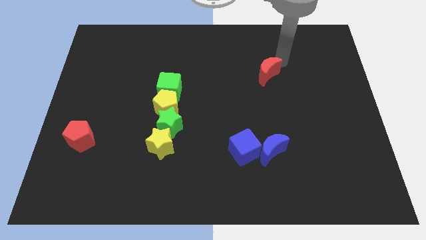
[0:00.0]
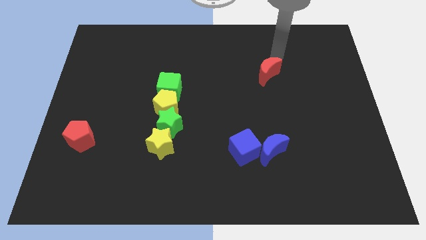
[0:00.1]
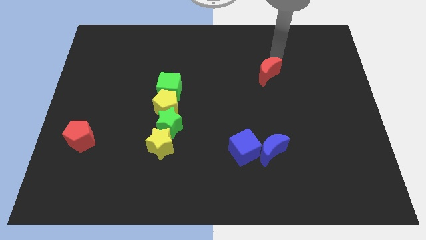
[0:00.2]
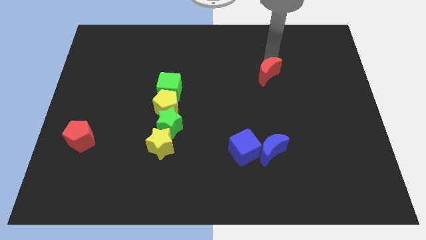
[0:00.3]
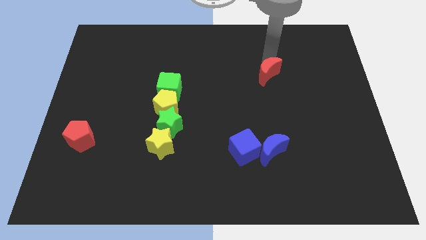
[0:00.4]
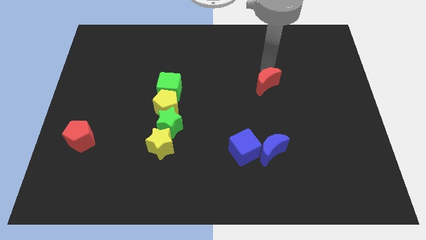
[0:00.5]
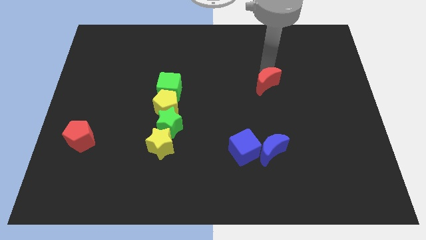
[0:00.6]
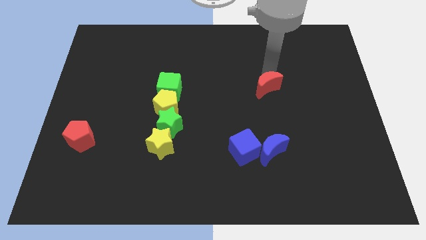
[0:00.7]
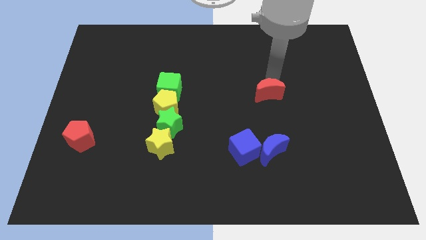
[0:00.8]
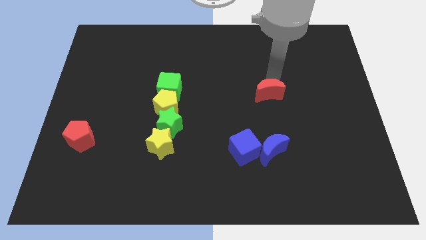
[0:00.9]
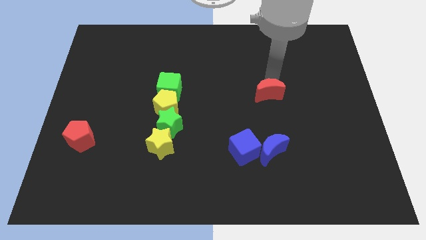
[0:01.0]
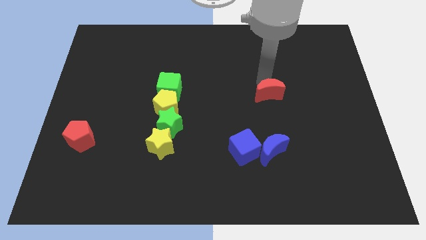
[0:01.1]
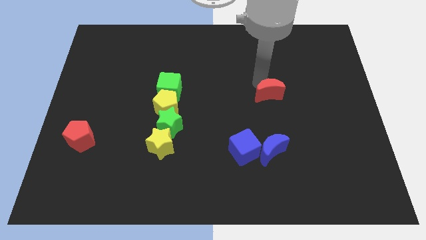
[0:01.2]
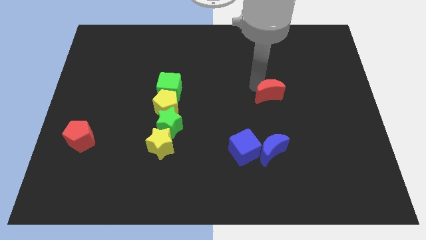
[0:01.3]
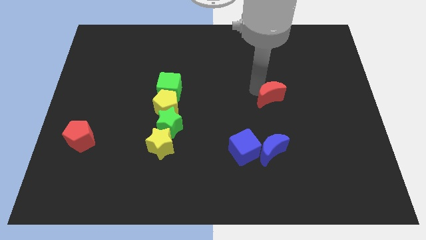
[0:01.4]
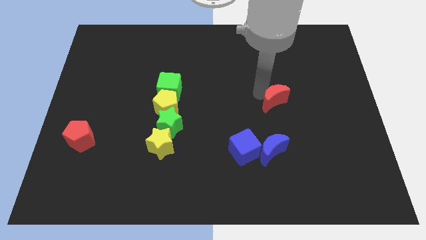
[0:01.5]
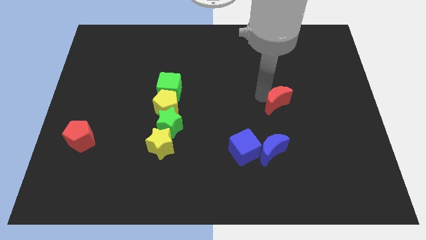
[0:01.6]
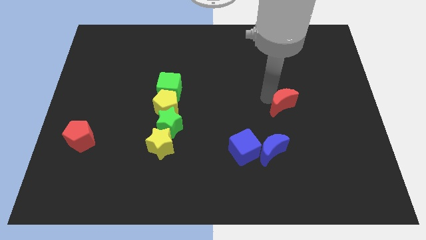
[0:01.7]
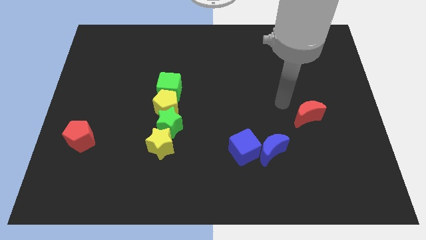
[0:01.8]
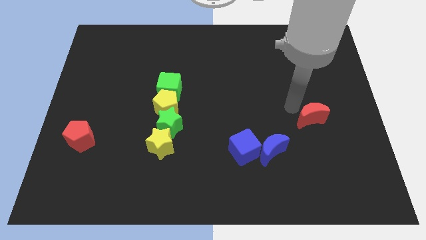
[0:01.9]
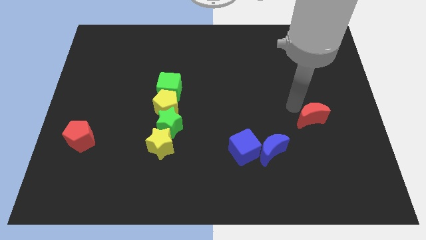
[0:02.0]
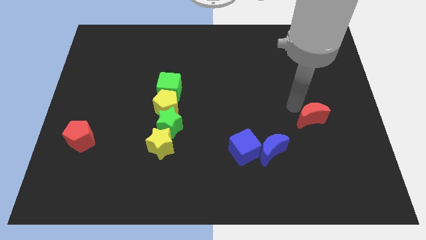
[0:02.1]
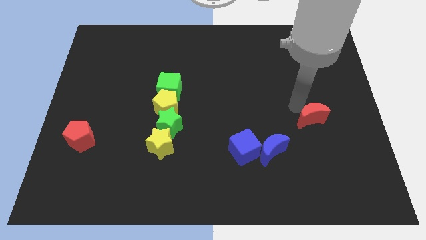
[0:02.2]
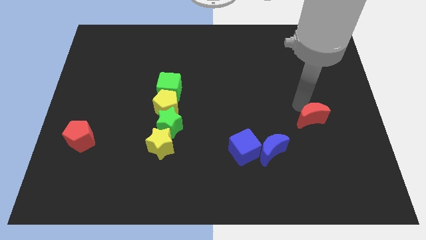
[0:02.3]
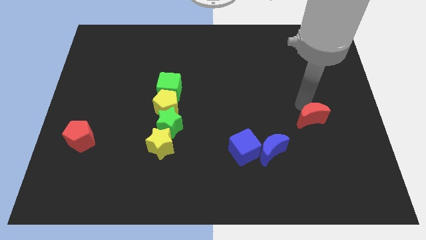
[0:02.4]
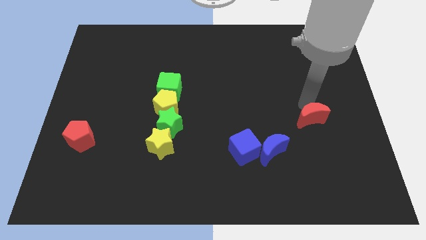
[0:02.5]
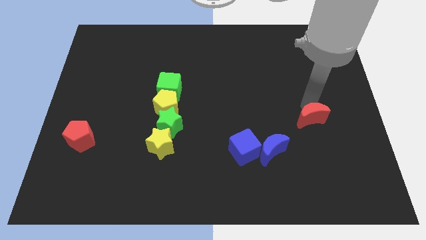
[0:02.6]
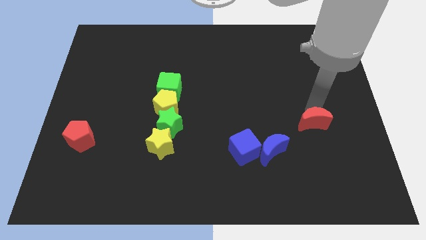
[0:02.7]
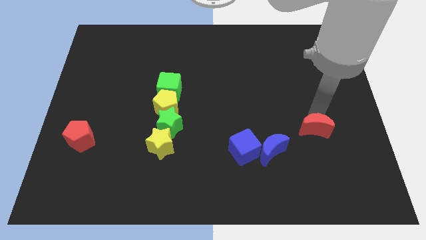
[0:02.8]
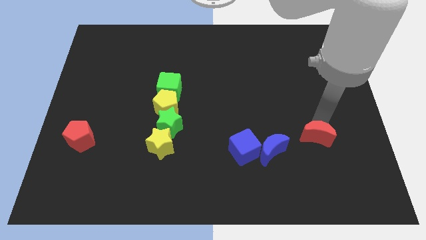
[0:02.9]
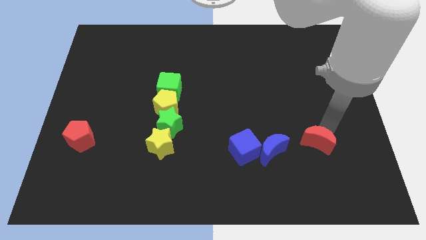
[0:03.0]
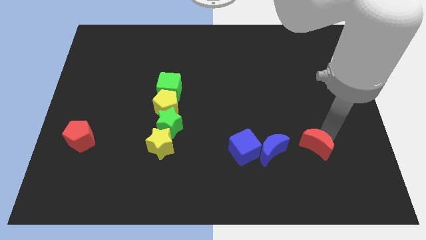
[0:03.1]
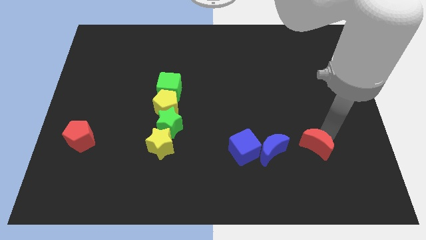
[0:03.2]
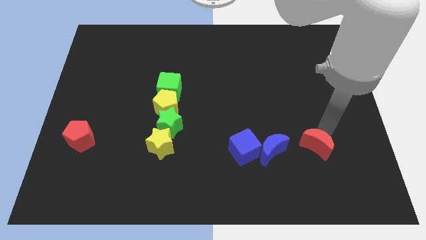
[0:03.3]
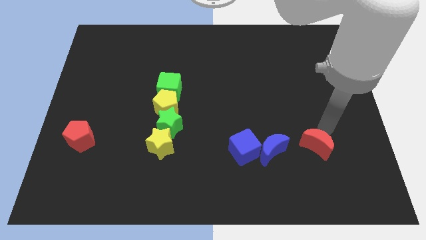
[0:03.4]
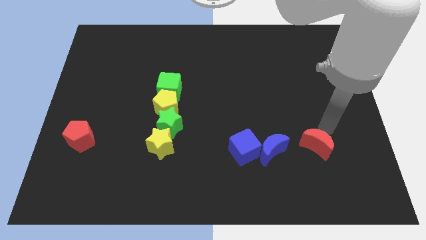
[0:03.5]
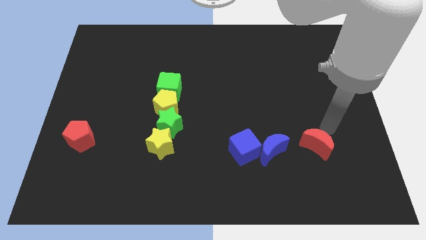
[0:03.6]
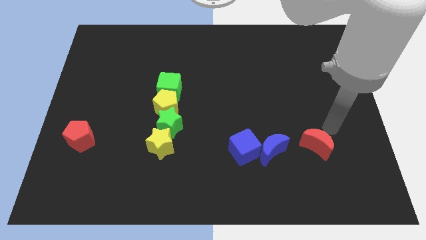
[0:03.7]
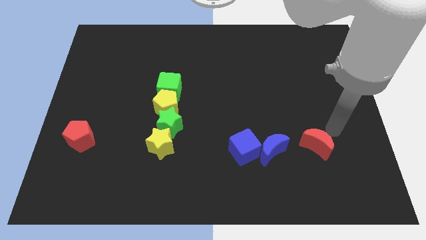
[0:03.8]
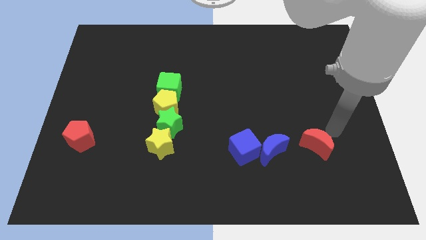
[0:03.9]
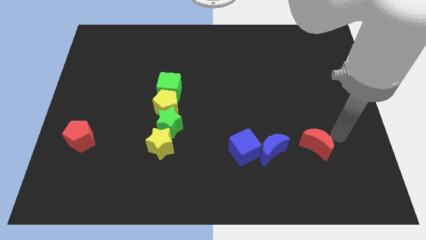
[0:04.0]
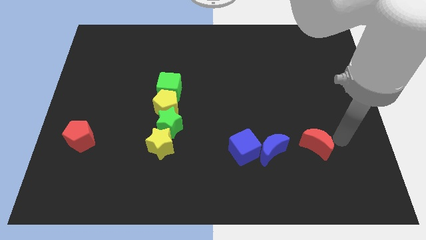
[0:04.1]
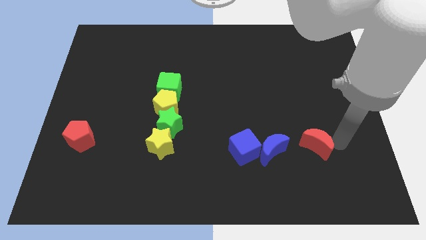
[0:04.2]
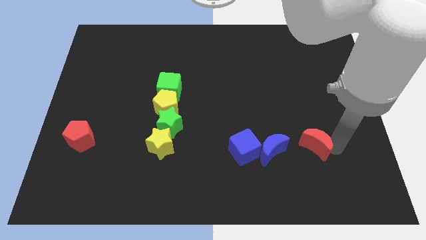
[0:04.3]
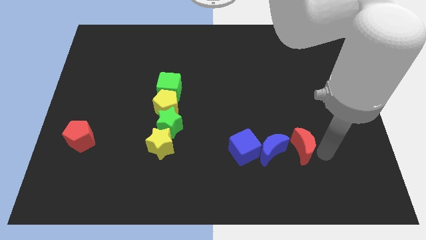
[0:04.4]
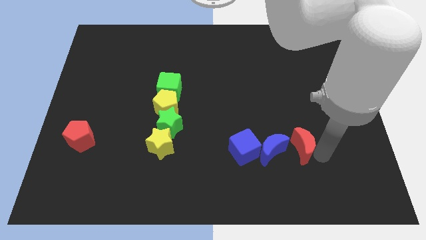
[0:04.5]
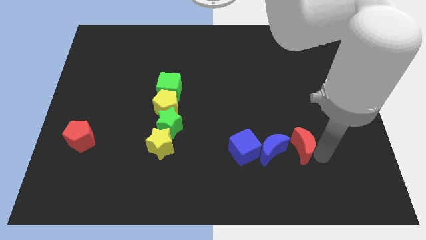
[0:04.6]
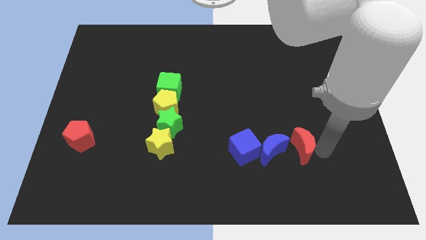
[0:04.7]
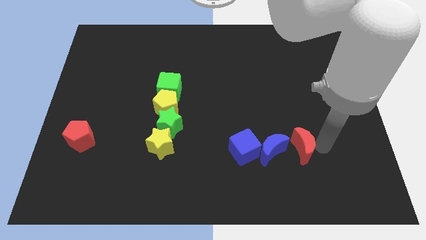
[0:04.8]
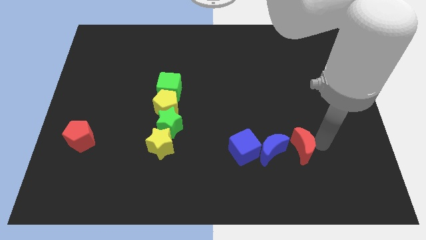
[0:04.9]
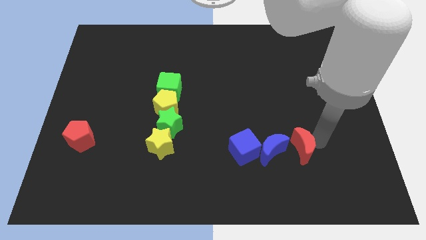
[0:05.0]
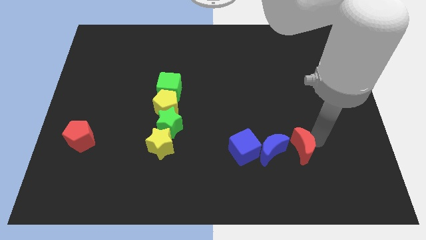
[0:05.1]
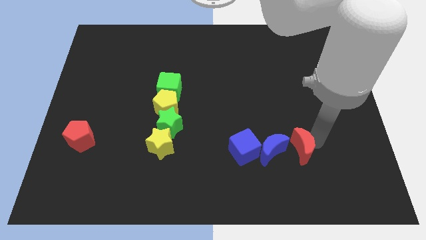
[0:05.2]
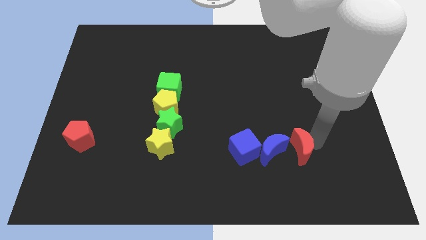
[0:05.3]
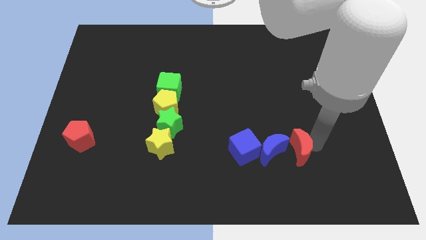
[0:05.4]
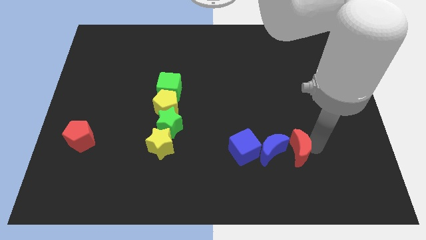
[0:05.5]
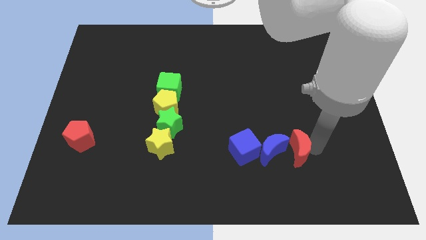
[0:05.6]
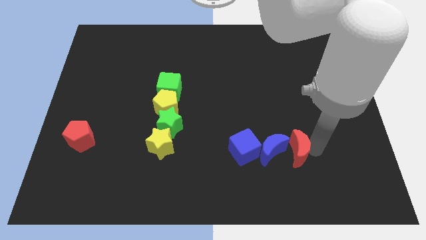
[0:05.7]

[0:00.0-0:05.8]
move the red crescent near towards the right side of the blue crescent

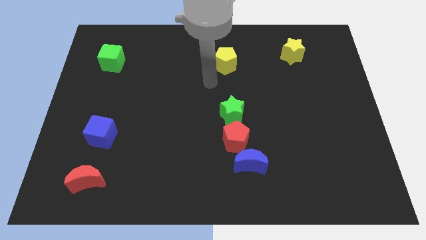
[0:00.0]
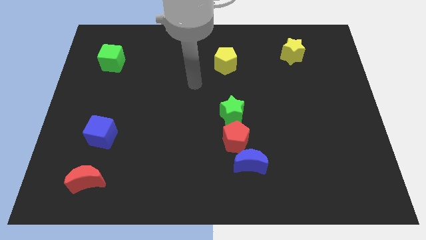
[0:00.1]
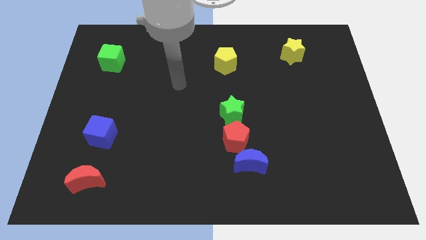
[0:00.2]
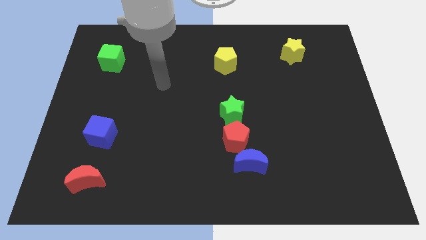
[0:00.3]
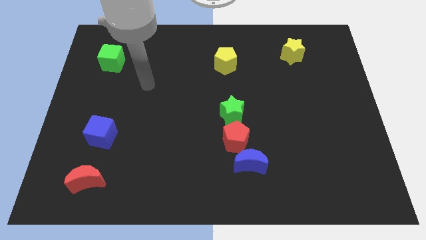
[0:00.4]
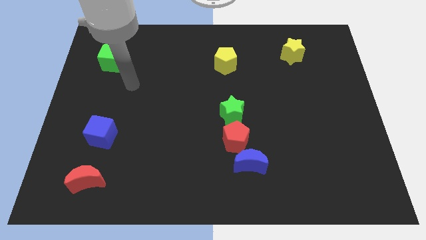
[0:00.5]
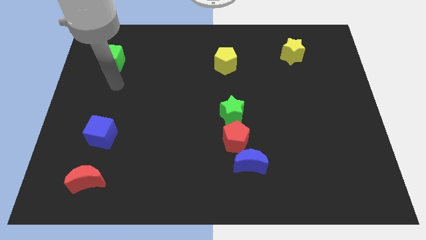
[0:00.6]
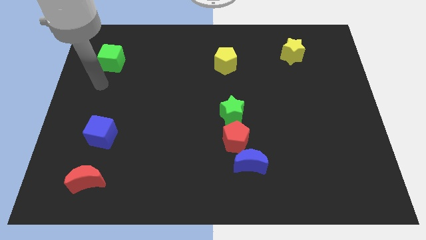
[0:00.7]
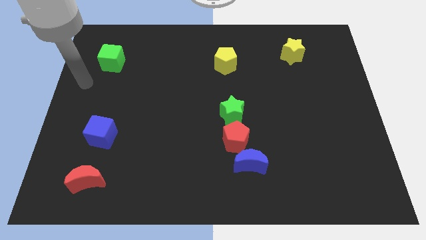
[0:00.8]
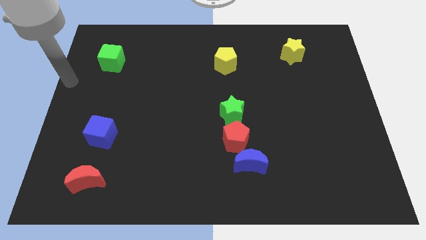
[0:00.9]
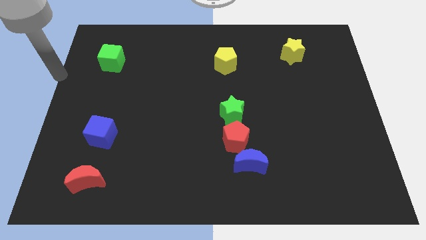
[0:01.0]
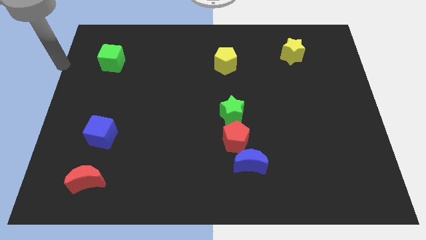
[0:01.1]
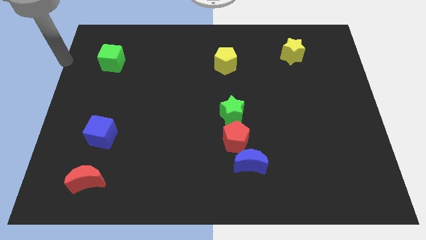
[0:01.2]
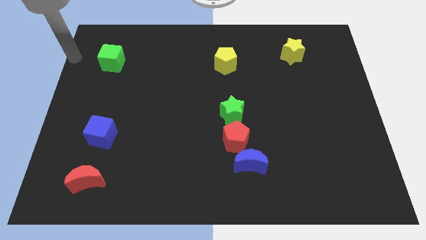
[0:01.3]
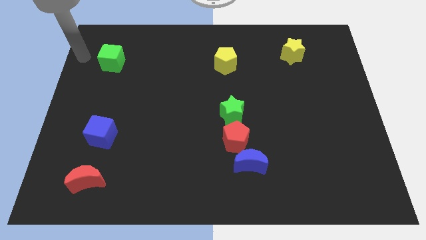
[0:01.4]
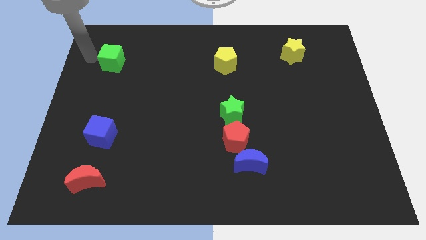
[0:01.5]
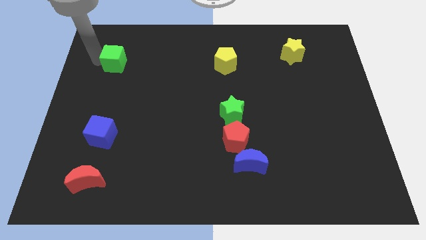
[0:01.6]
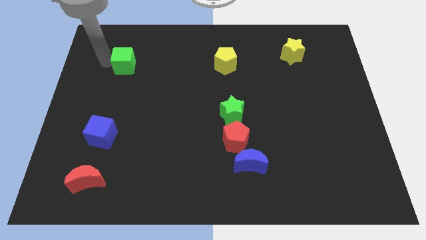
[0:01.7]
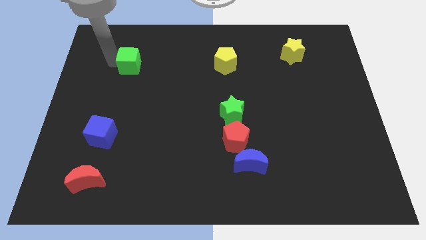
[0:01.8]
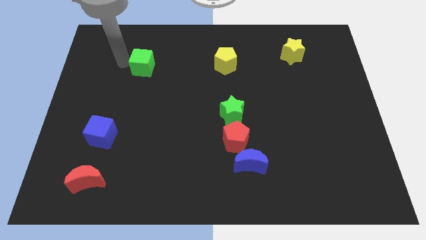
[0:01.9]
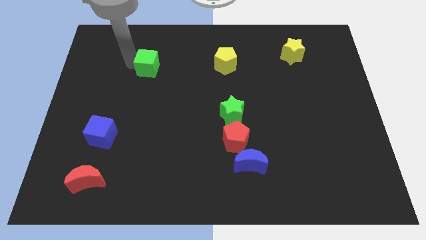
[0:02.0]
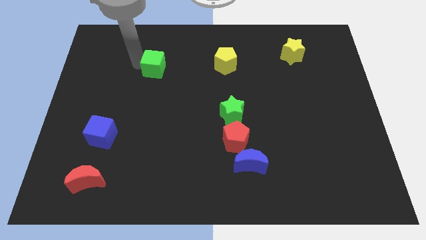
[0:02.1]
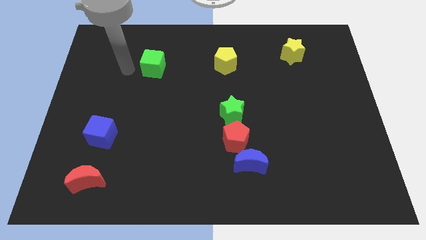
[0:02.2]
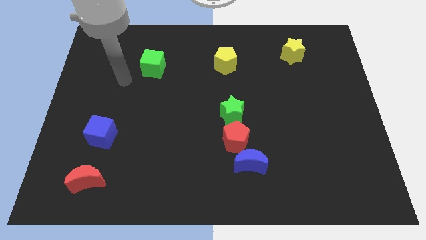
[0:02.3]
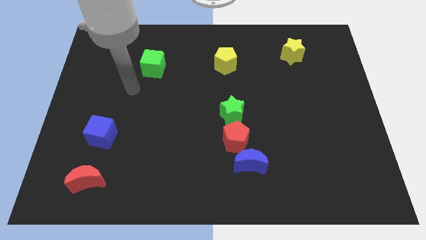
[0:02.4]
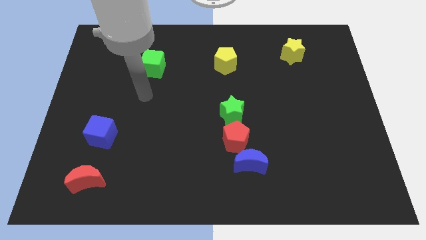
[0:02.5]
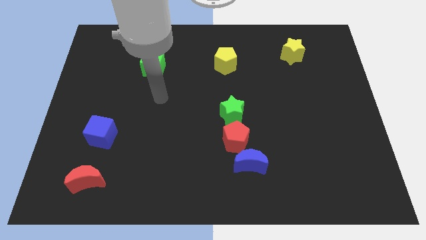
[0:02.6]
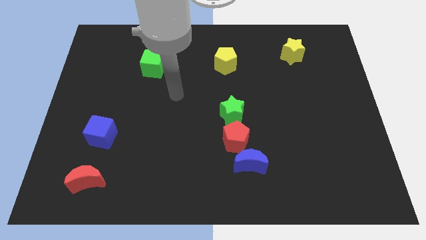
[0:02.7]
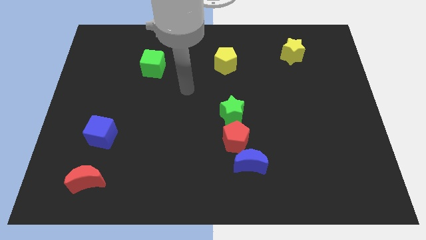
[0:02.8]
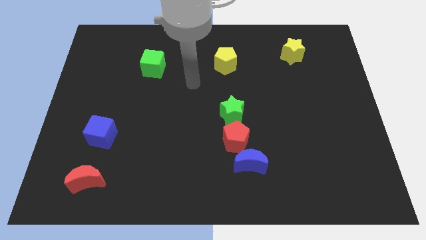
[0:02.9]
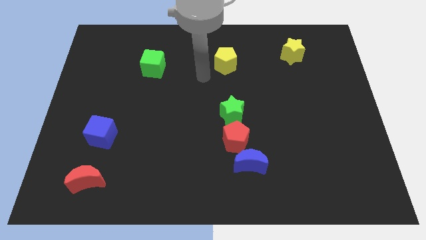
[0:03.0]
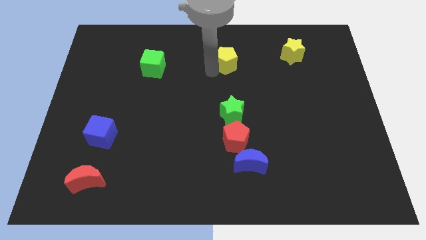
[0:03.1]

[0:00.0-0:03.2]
move the green cube left to the yellow pentagon
